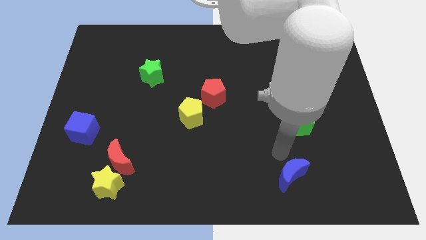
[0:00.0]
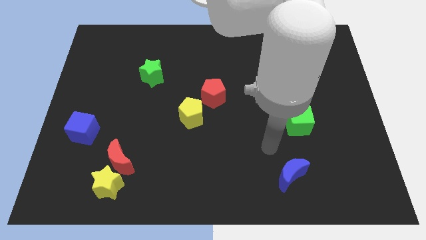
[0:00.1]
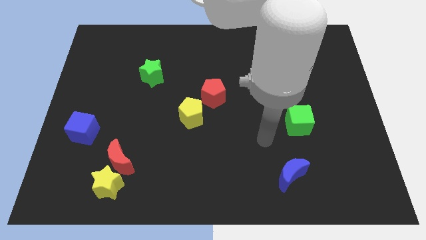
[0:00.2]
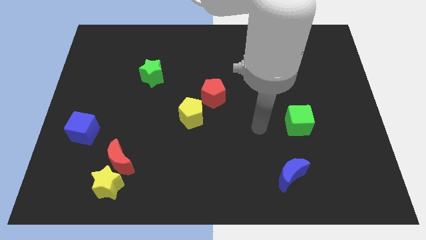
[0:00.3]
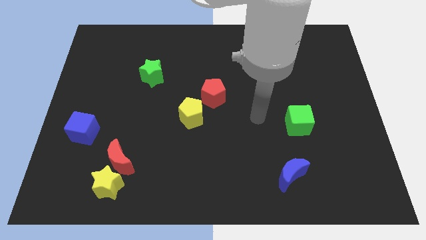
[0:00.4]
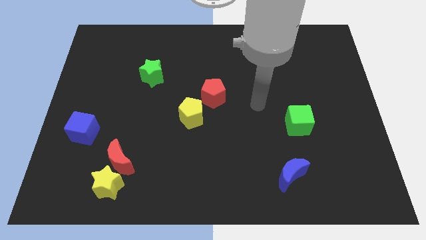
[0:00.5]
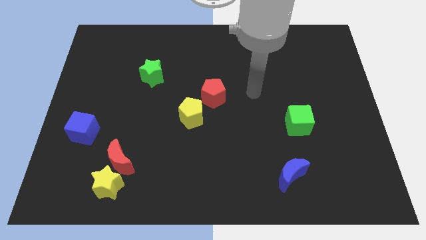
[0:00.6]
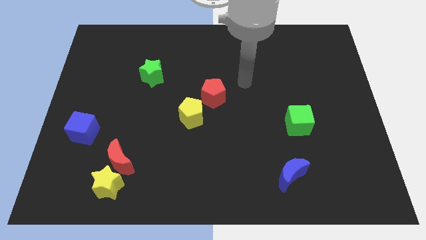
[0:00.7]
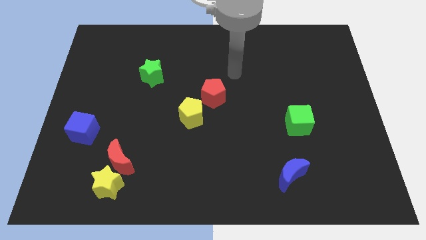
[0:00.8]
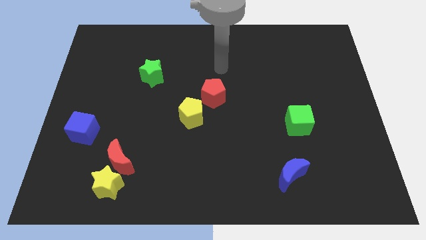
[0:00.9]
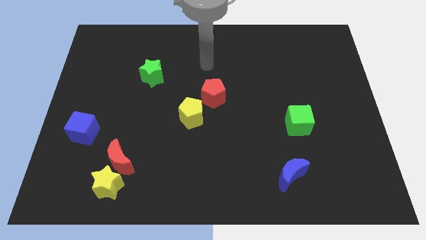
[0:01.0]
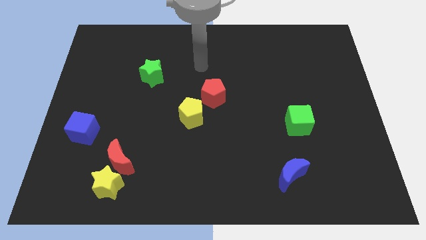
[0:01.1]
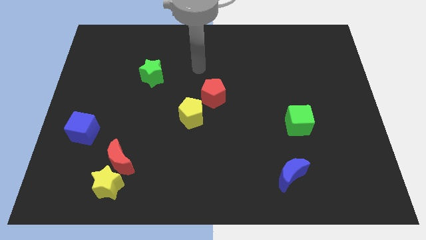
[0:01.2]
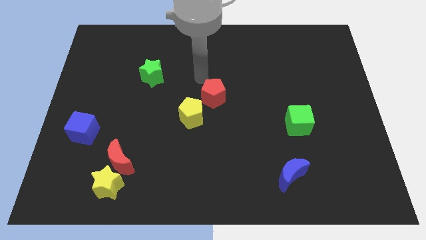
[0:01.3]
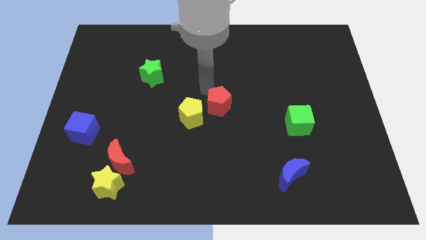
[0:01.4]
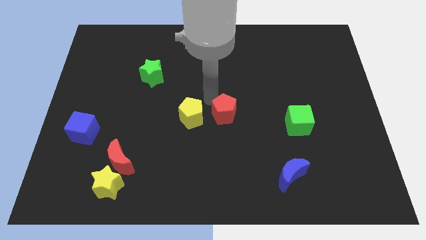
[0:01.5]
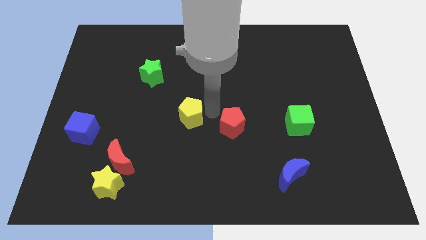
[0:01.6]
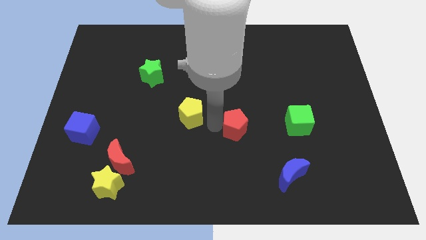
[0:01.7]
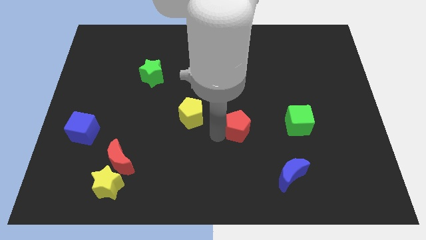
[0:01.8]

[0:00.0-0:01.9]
place the red pentagon at left side of the green cube

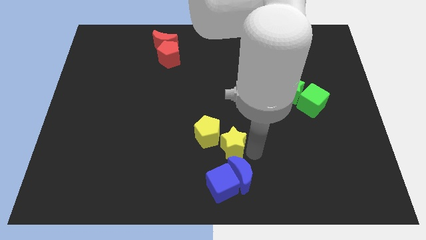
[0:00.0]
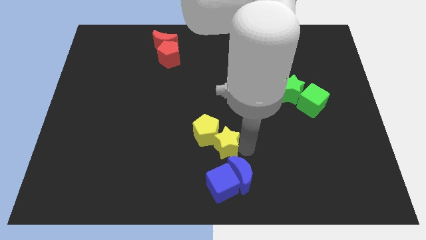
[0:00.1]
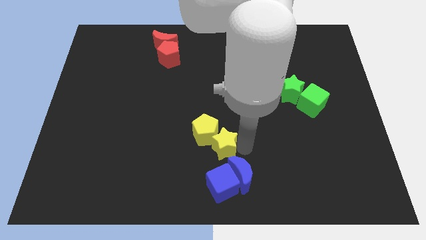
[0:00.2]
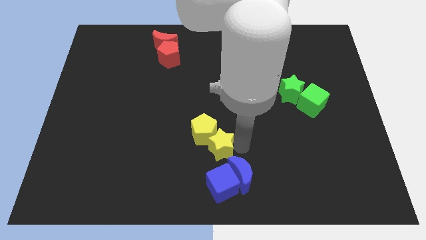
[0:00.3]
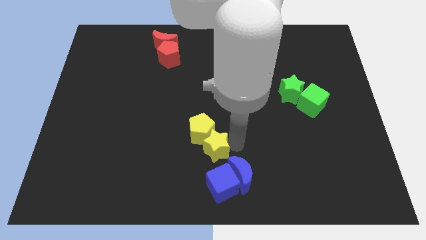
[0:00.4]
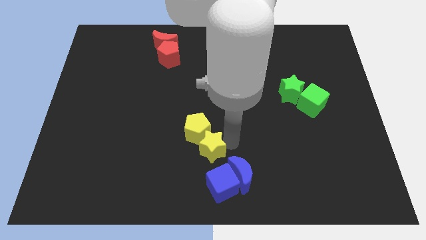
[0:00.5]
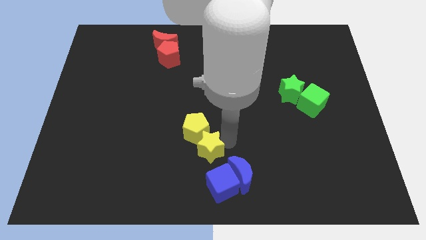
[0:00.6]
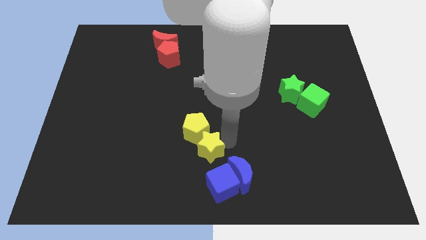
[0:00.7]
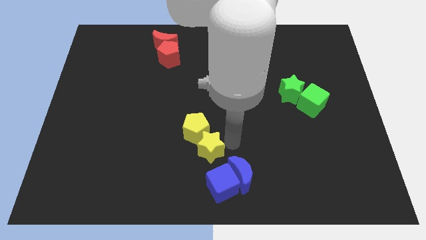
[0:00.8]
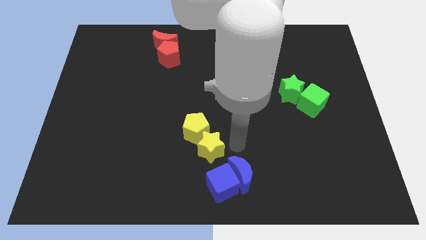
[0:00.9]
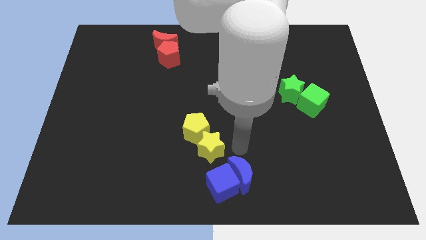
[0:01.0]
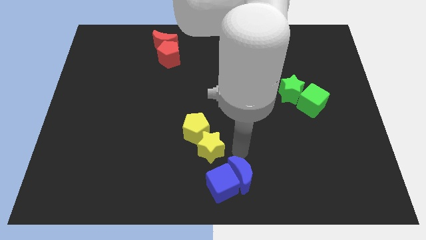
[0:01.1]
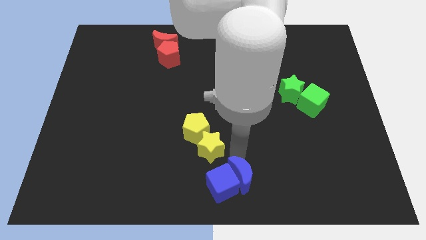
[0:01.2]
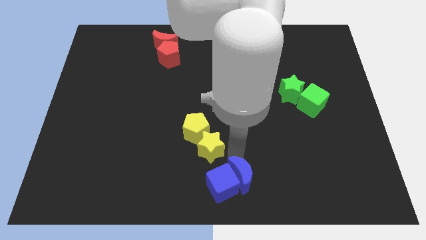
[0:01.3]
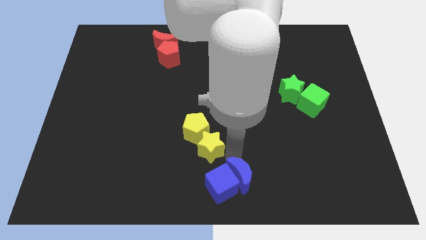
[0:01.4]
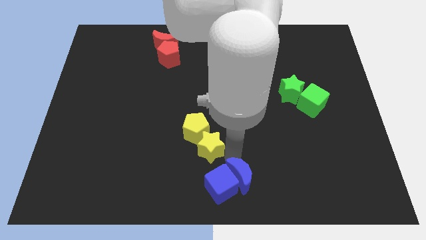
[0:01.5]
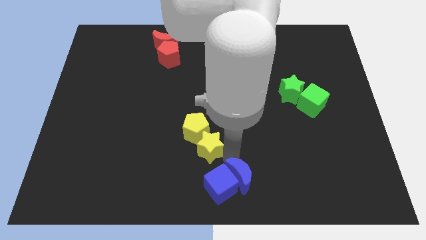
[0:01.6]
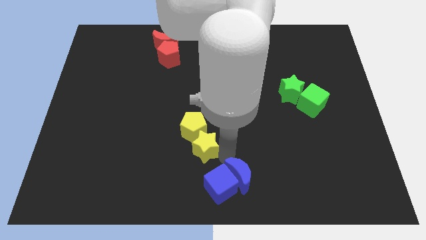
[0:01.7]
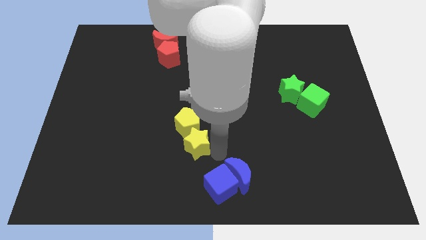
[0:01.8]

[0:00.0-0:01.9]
separate the yellow blocks from the blue blocks

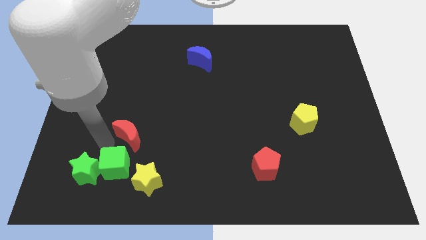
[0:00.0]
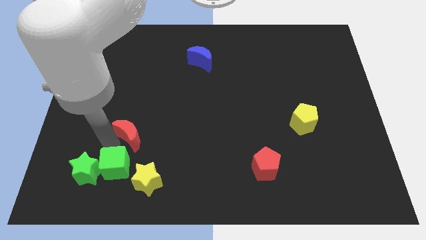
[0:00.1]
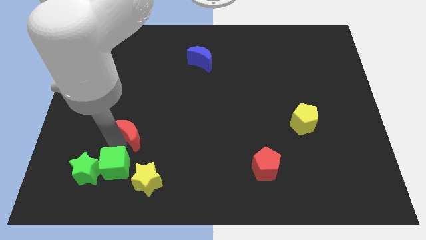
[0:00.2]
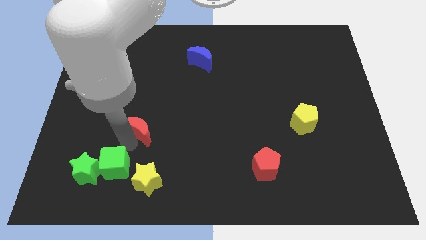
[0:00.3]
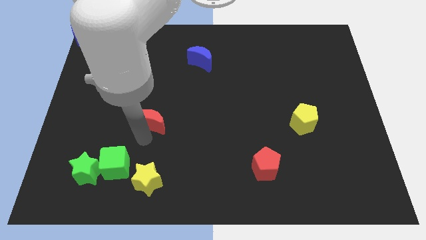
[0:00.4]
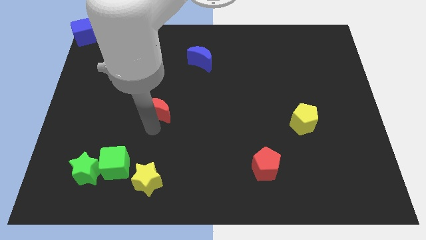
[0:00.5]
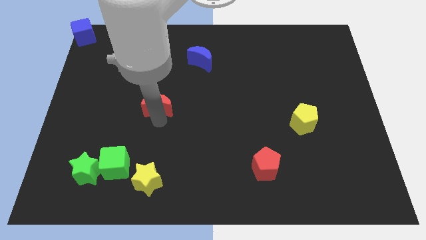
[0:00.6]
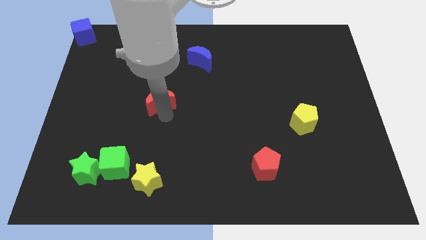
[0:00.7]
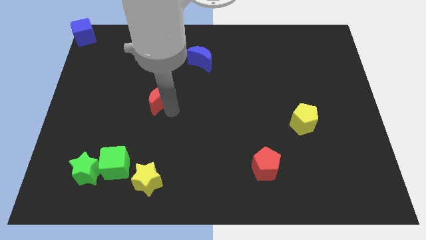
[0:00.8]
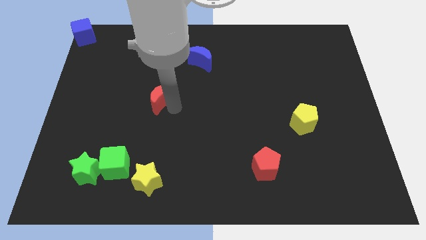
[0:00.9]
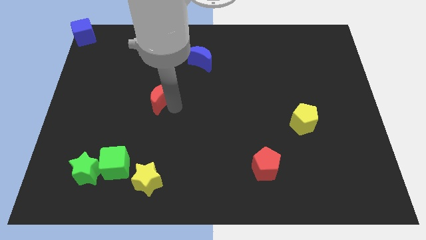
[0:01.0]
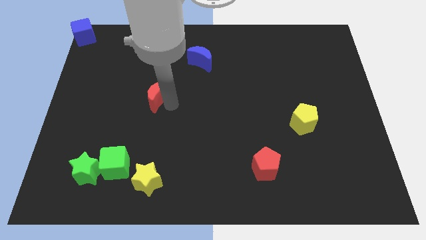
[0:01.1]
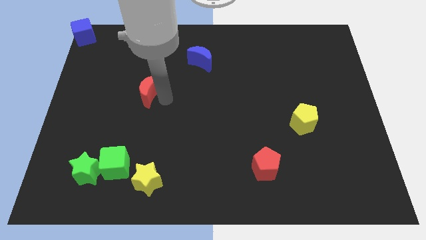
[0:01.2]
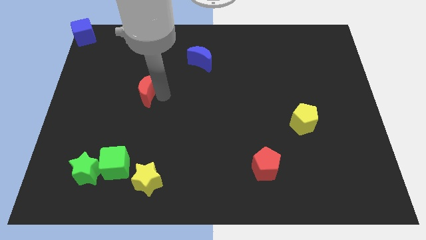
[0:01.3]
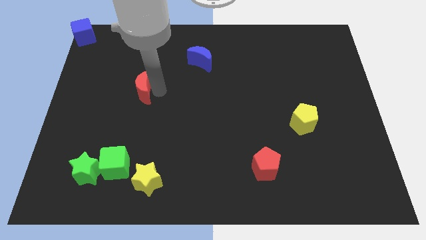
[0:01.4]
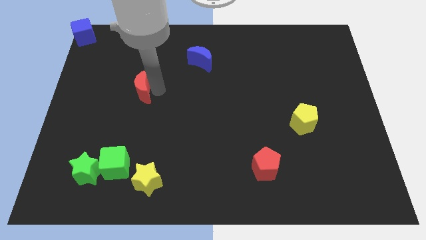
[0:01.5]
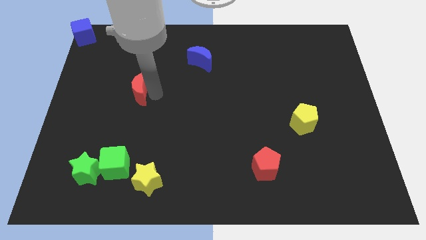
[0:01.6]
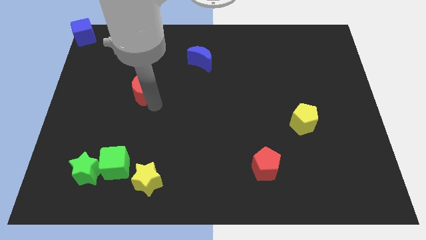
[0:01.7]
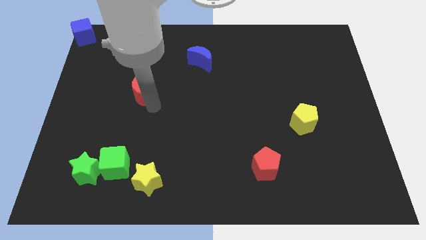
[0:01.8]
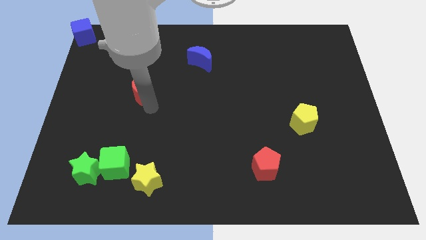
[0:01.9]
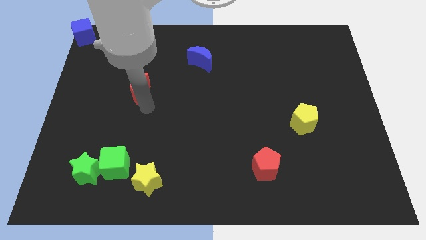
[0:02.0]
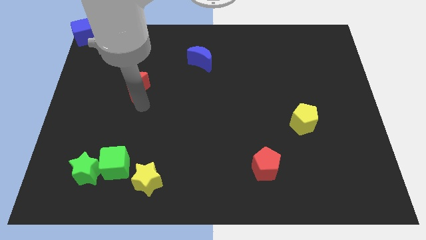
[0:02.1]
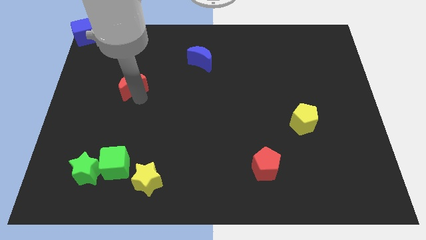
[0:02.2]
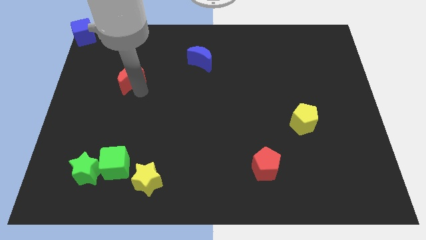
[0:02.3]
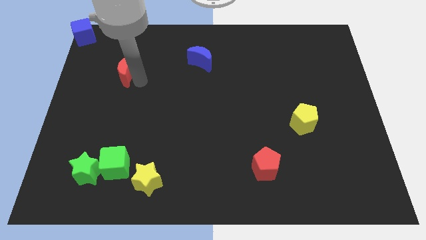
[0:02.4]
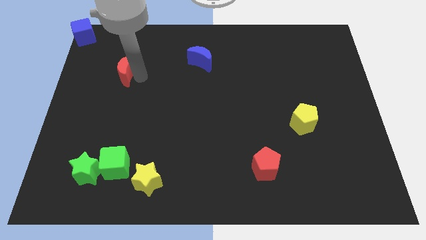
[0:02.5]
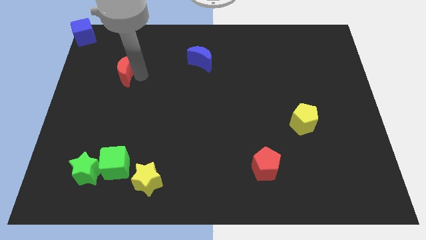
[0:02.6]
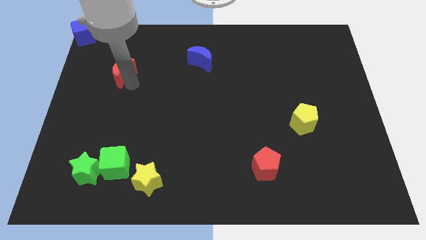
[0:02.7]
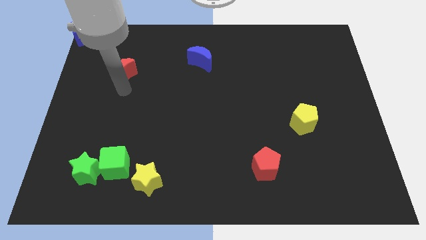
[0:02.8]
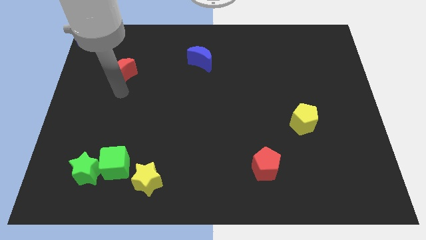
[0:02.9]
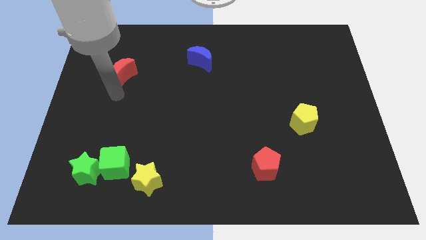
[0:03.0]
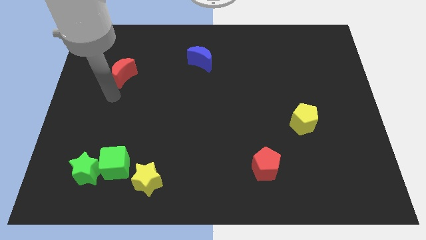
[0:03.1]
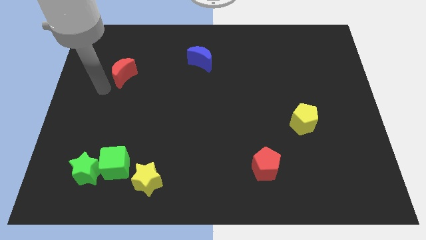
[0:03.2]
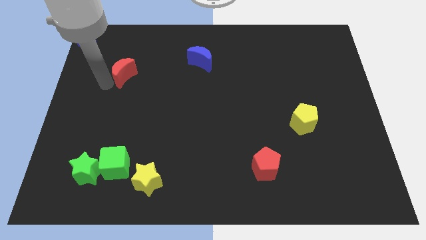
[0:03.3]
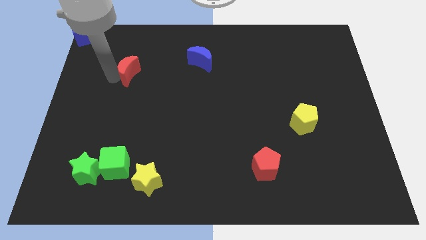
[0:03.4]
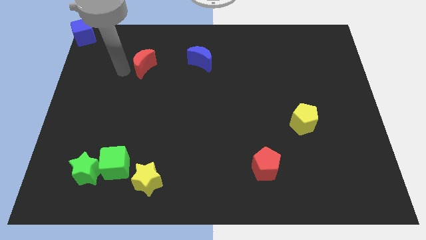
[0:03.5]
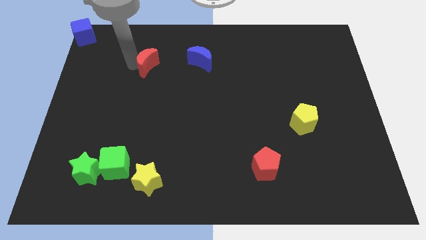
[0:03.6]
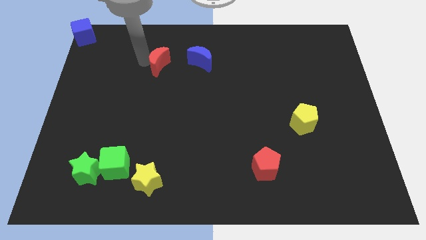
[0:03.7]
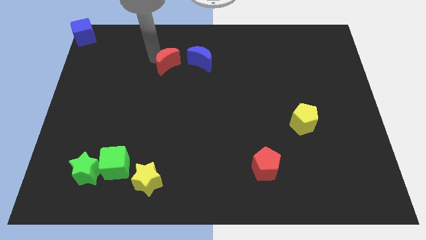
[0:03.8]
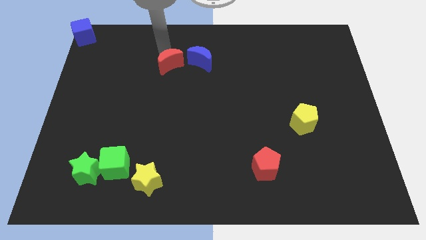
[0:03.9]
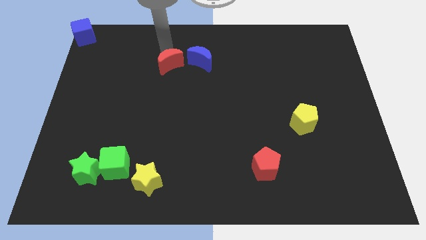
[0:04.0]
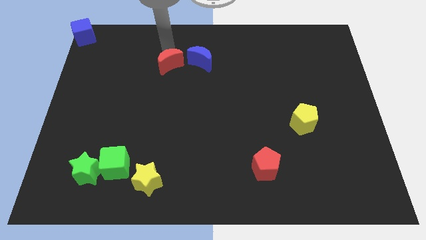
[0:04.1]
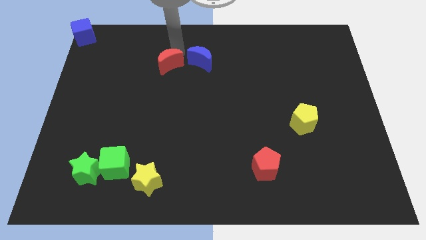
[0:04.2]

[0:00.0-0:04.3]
place the red moon parallel left to the blue moon

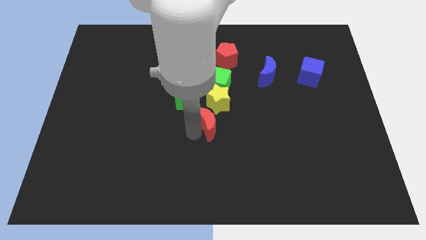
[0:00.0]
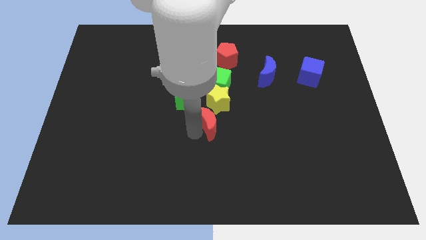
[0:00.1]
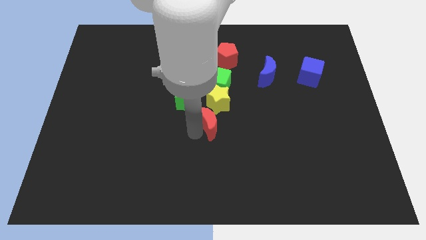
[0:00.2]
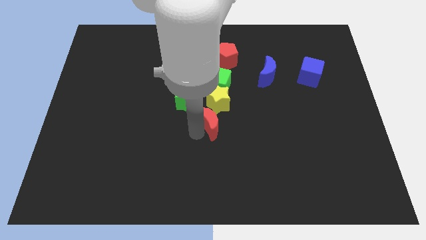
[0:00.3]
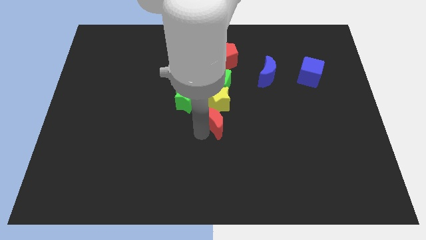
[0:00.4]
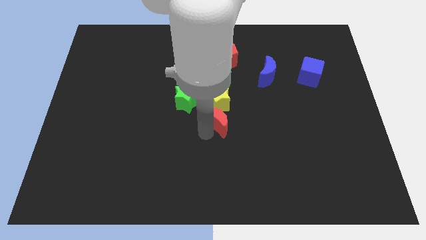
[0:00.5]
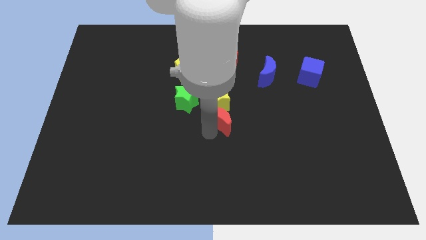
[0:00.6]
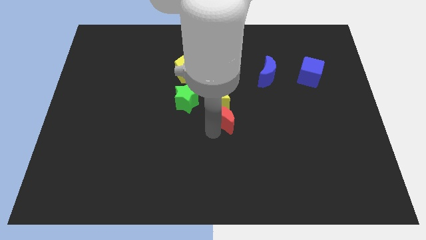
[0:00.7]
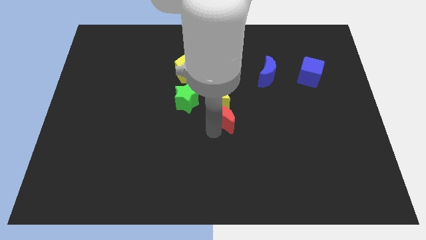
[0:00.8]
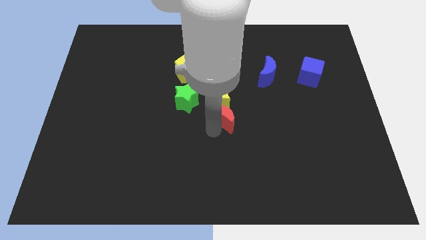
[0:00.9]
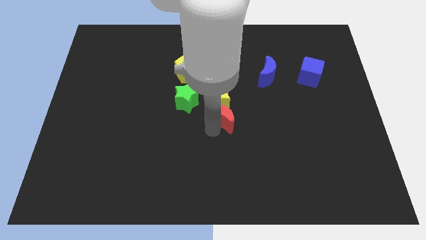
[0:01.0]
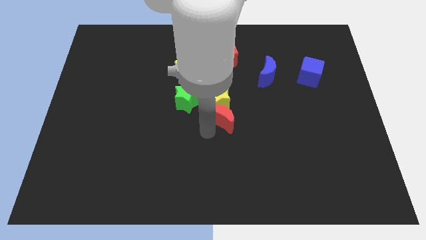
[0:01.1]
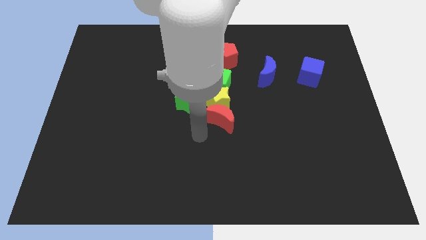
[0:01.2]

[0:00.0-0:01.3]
push the red moon below to the yellow star
